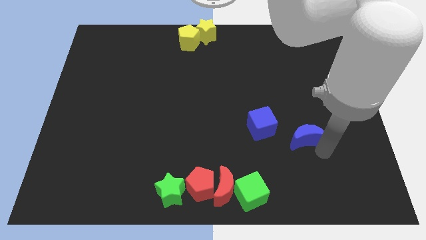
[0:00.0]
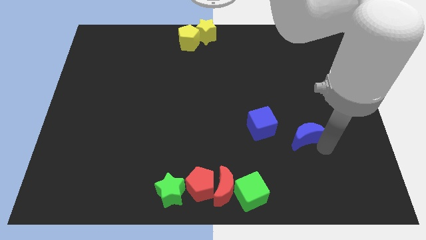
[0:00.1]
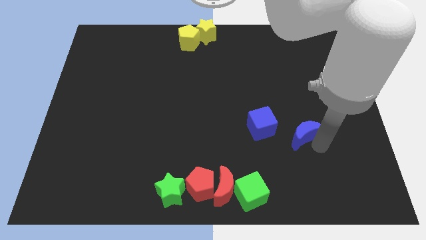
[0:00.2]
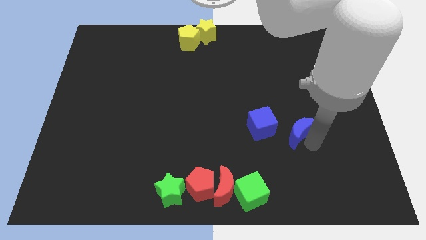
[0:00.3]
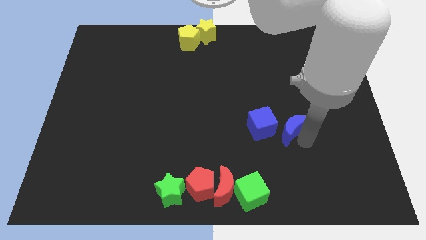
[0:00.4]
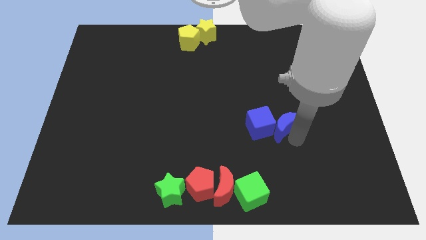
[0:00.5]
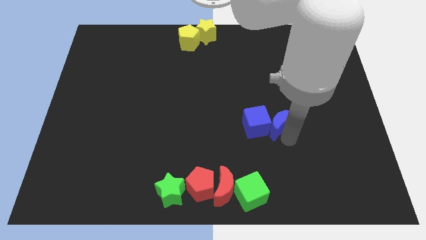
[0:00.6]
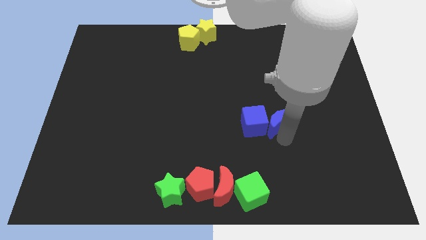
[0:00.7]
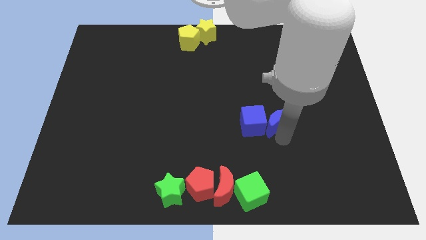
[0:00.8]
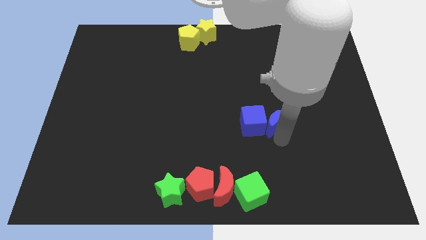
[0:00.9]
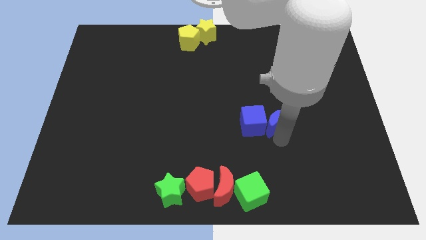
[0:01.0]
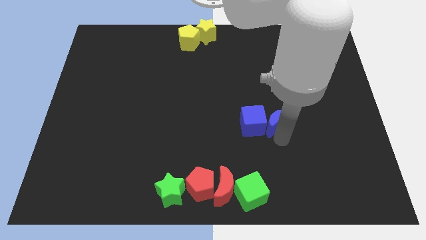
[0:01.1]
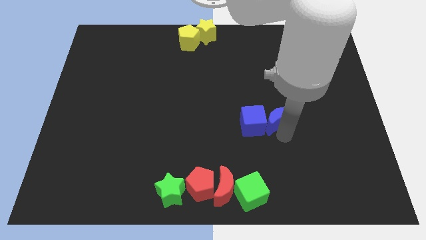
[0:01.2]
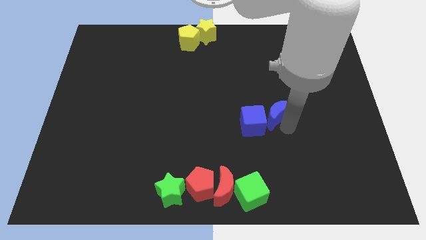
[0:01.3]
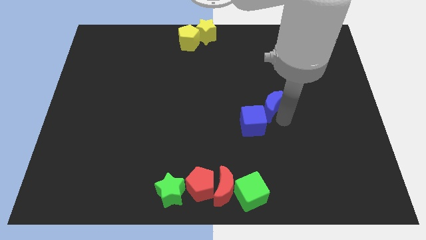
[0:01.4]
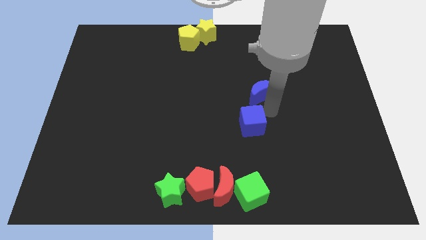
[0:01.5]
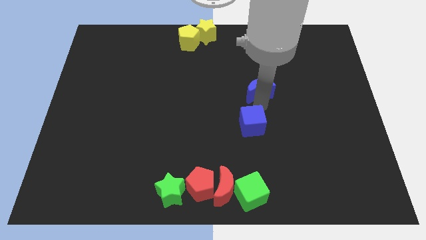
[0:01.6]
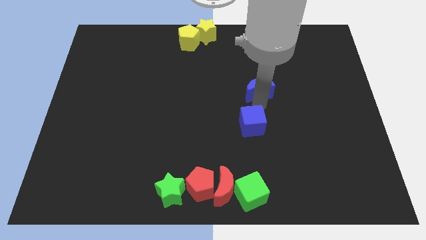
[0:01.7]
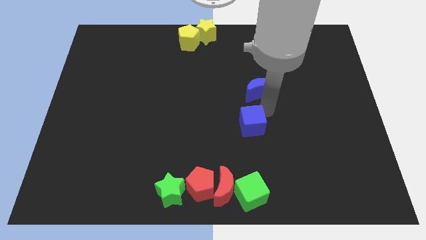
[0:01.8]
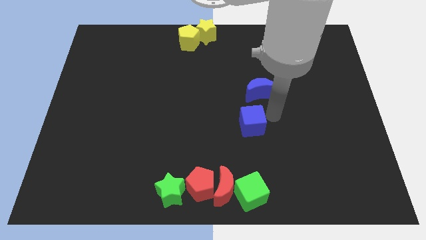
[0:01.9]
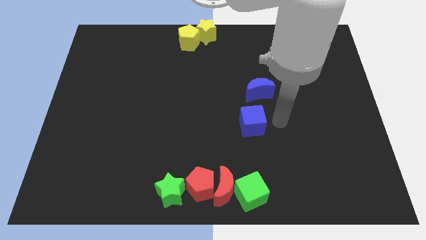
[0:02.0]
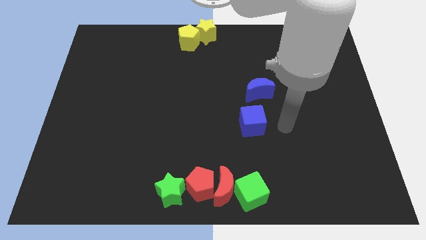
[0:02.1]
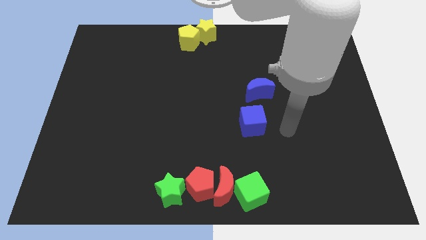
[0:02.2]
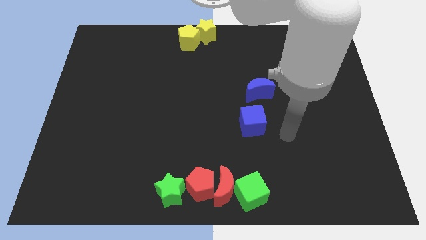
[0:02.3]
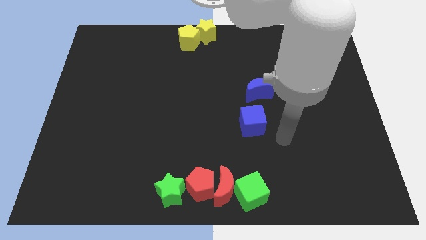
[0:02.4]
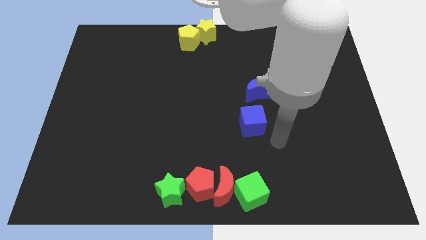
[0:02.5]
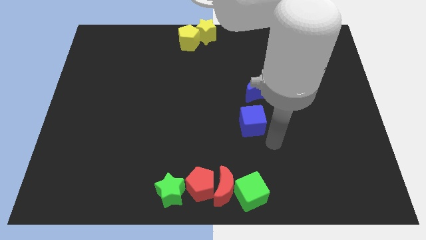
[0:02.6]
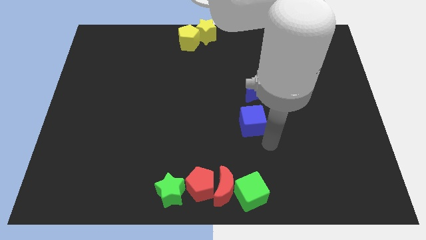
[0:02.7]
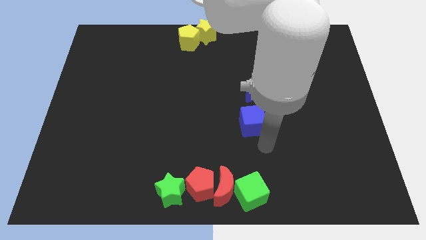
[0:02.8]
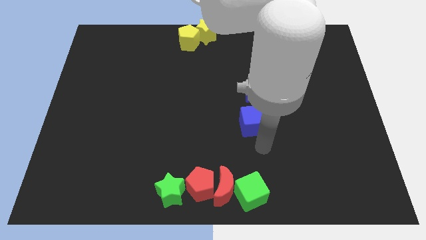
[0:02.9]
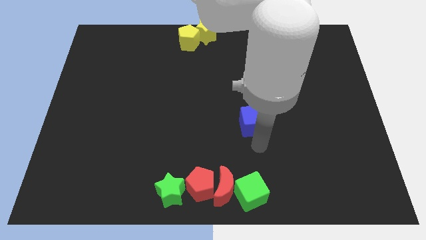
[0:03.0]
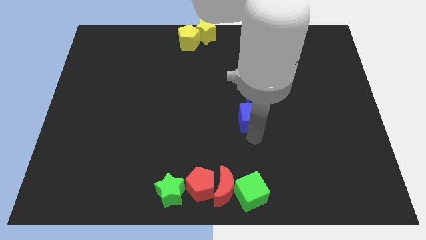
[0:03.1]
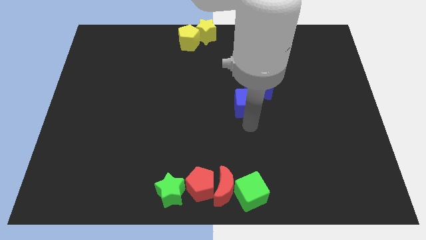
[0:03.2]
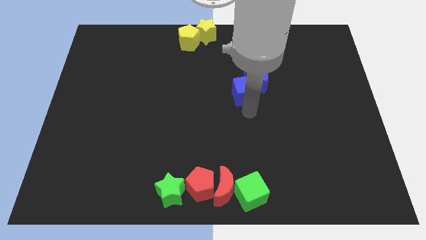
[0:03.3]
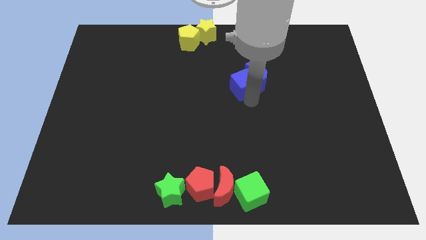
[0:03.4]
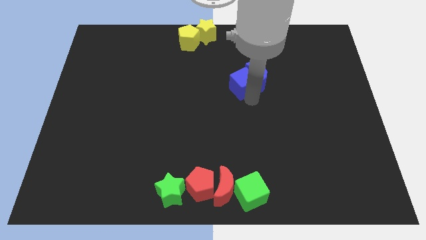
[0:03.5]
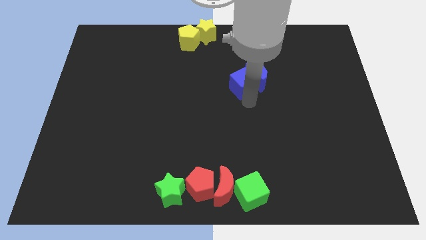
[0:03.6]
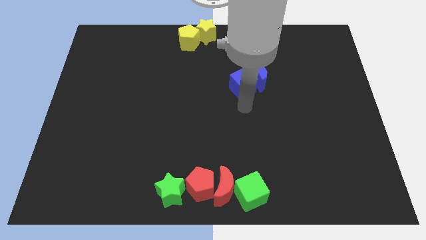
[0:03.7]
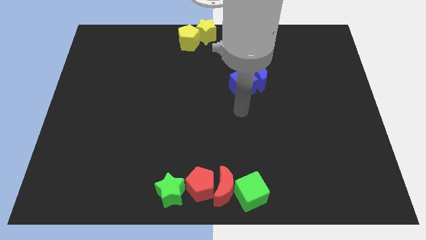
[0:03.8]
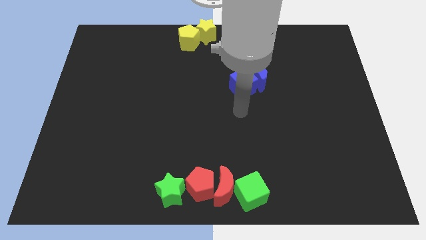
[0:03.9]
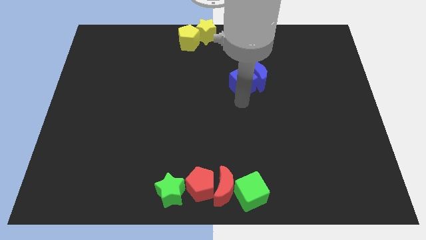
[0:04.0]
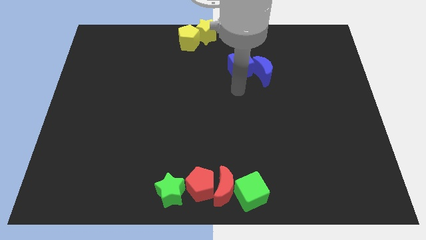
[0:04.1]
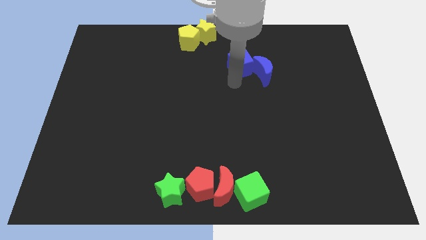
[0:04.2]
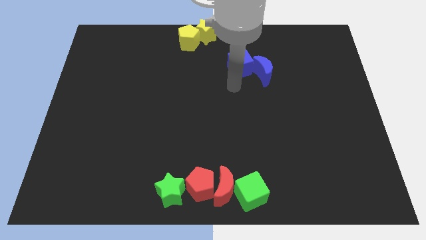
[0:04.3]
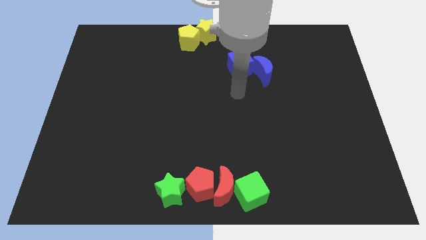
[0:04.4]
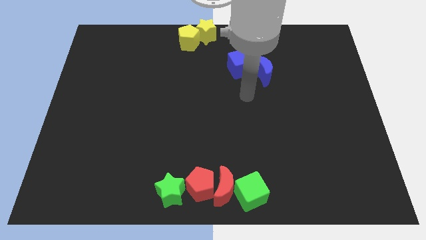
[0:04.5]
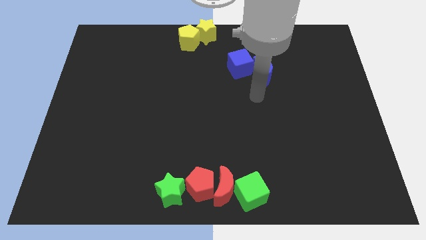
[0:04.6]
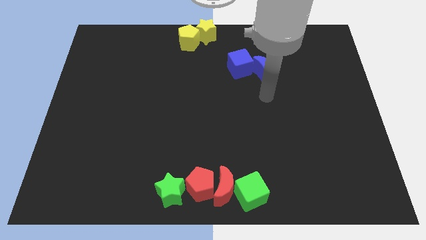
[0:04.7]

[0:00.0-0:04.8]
move the blue crescent into the blue cube

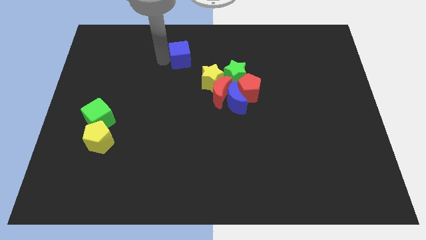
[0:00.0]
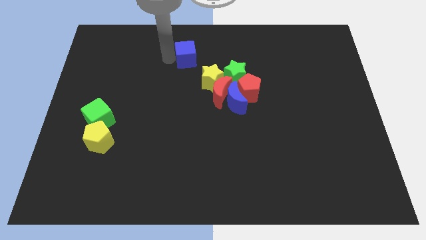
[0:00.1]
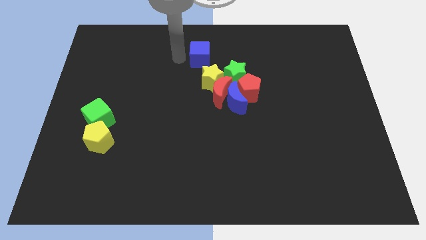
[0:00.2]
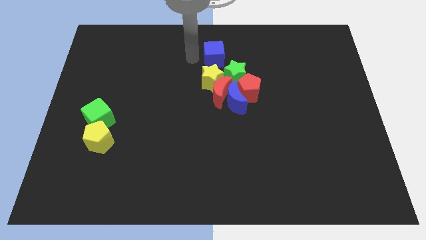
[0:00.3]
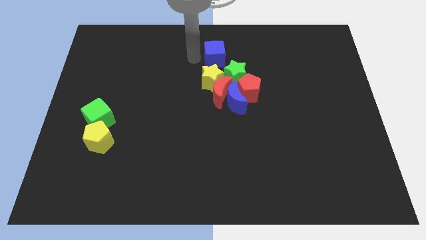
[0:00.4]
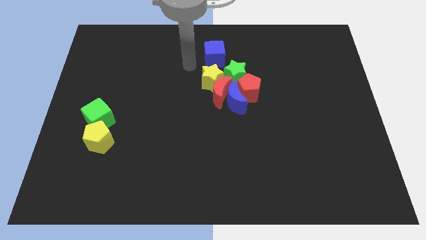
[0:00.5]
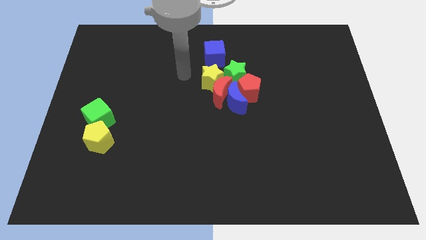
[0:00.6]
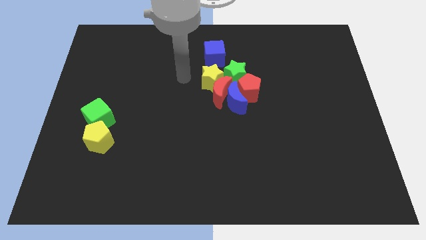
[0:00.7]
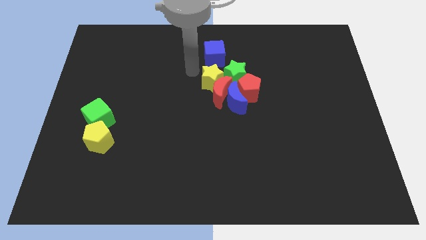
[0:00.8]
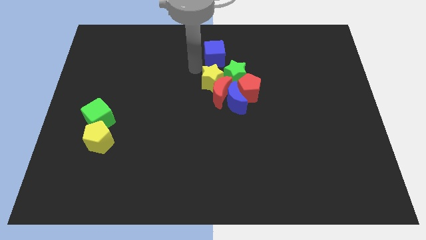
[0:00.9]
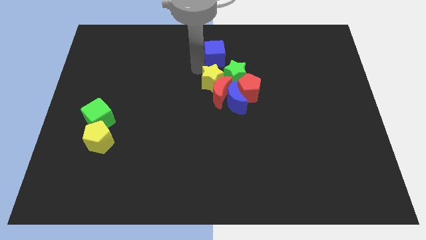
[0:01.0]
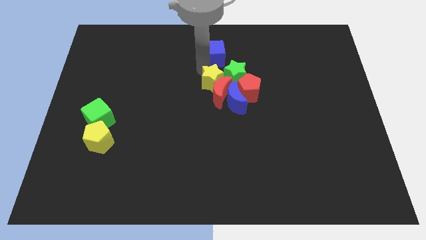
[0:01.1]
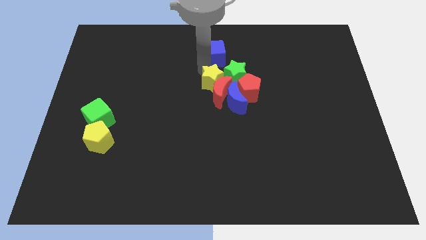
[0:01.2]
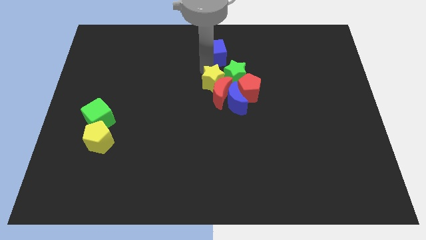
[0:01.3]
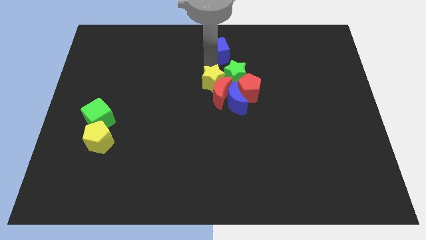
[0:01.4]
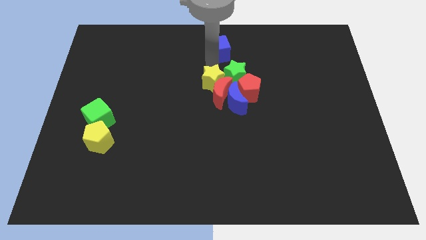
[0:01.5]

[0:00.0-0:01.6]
place the blue cube towards the green star

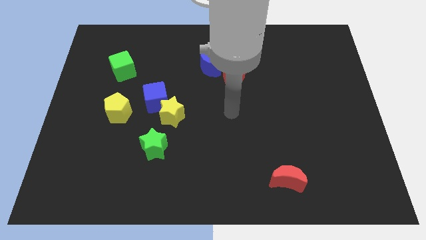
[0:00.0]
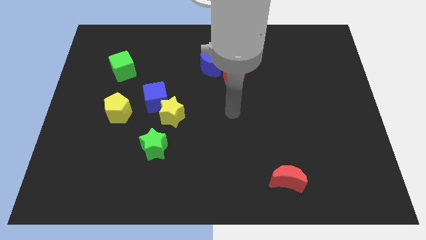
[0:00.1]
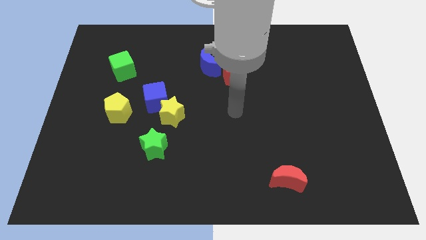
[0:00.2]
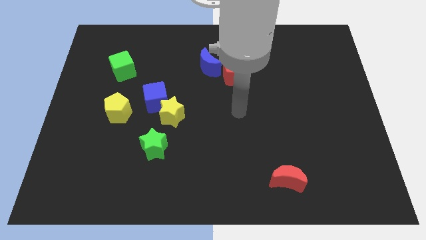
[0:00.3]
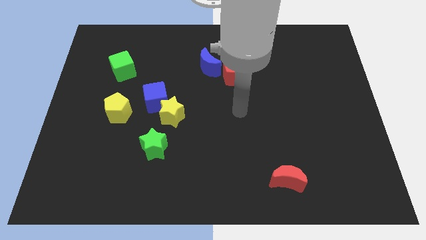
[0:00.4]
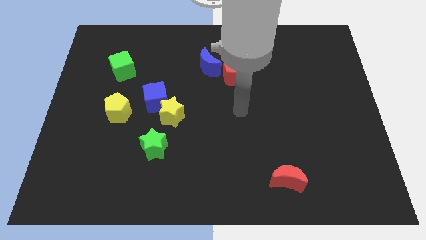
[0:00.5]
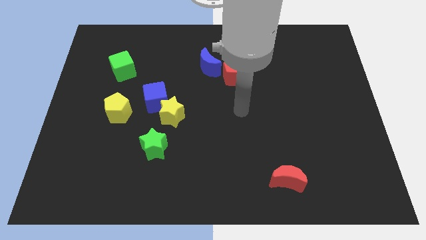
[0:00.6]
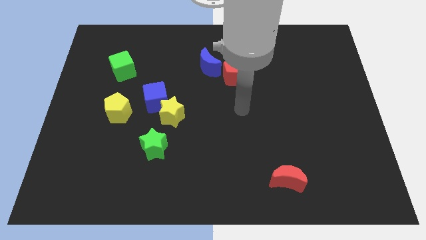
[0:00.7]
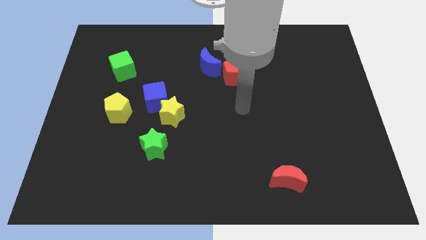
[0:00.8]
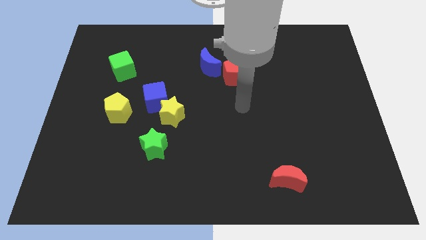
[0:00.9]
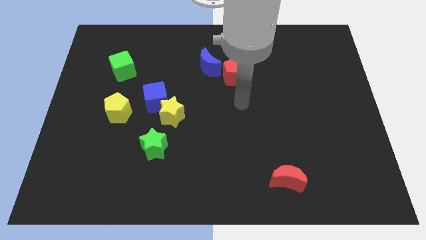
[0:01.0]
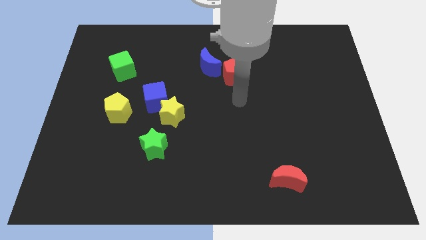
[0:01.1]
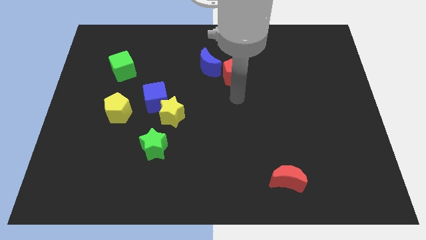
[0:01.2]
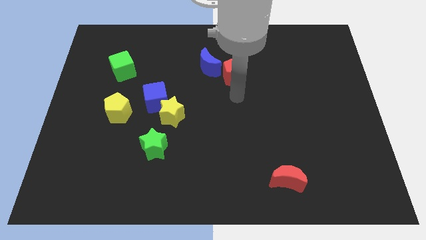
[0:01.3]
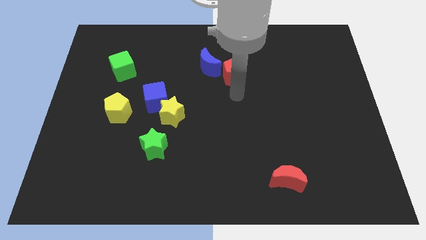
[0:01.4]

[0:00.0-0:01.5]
point your arm to the bottom side of the red pentagon

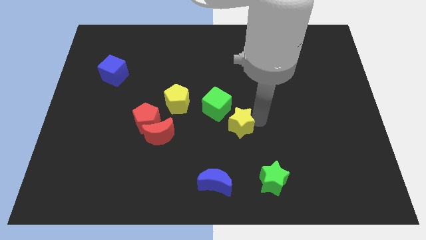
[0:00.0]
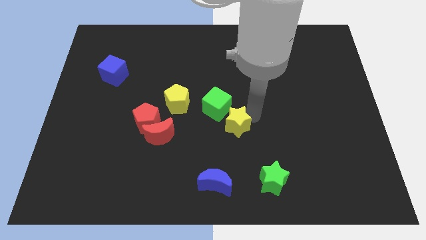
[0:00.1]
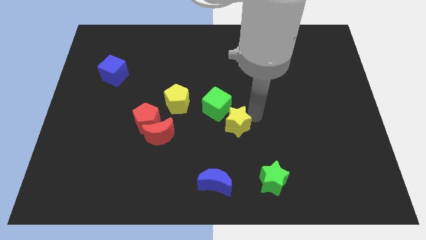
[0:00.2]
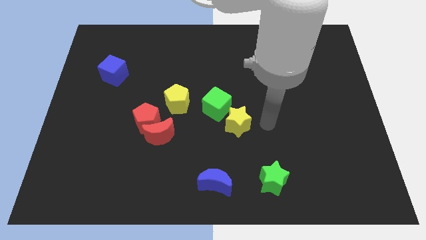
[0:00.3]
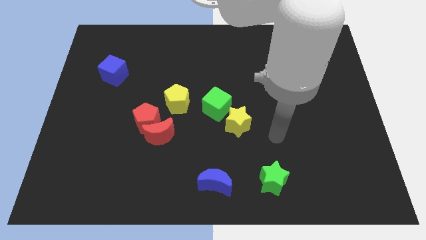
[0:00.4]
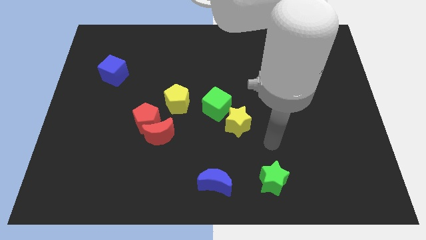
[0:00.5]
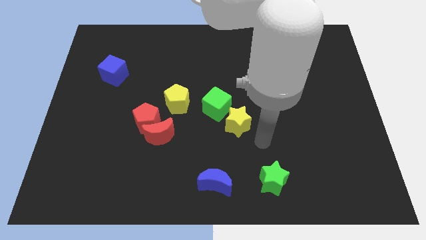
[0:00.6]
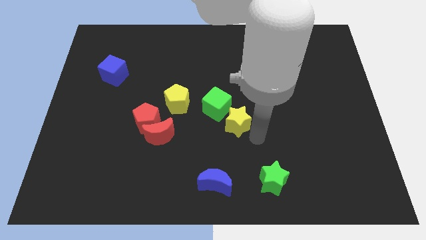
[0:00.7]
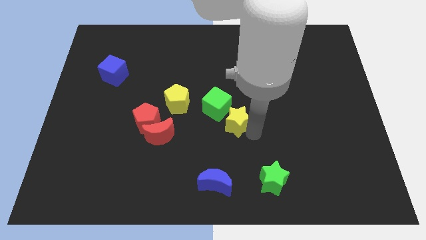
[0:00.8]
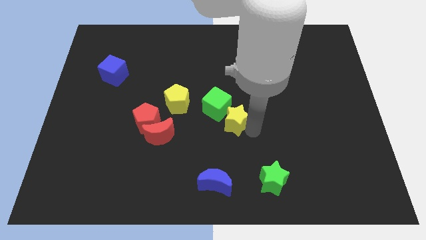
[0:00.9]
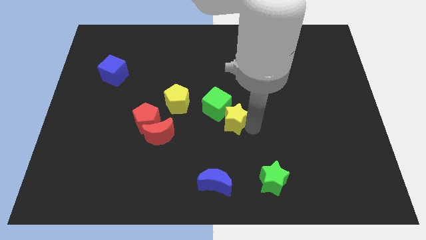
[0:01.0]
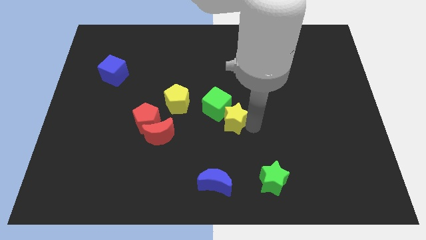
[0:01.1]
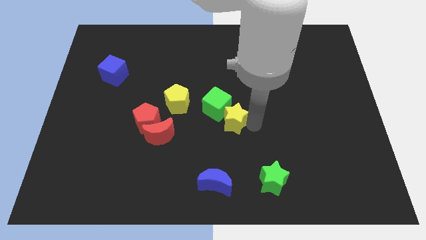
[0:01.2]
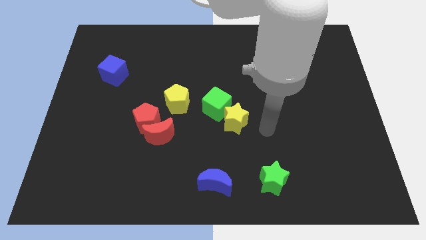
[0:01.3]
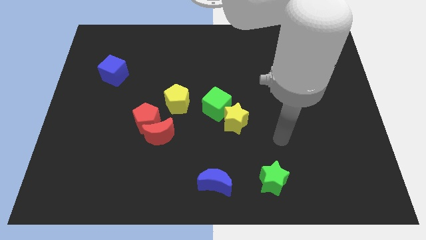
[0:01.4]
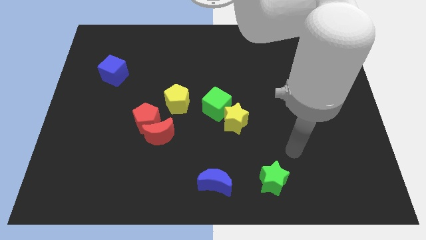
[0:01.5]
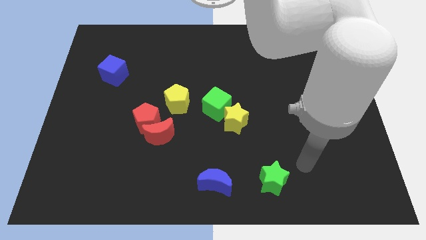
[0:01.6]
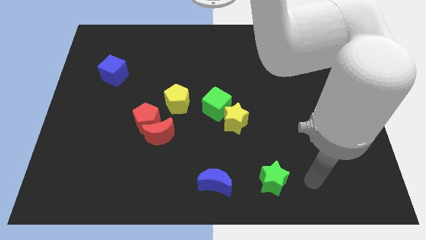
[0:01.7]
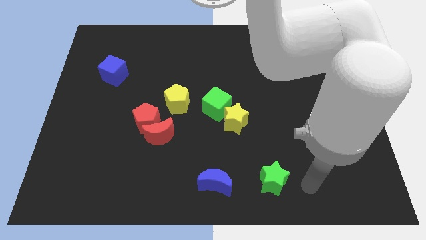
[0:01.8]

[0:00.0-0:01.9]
move yellow star near to the green cube
